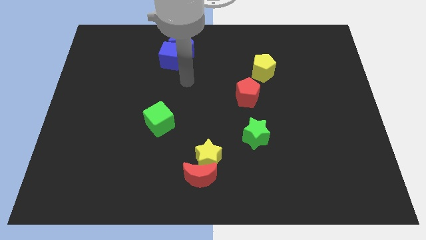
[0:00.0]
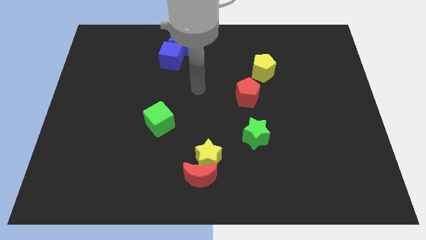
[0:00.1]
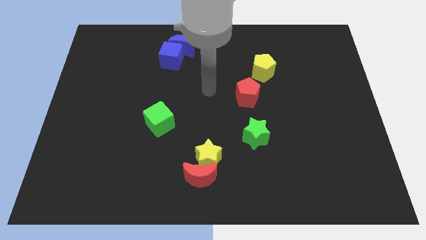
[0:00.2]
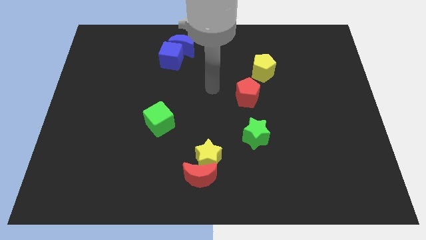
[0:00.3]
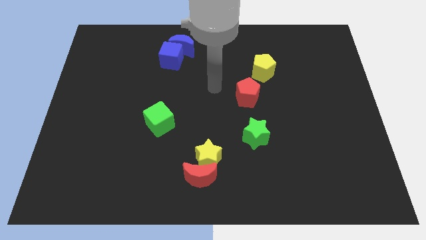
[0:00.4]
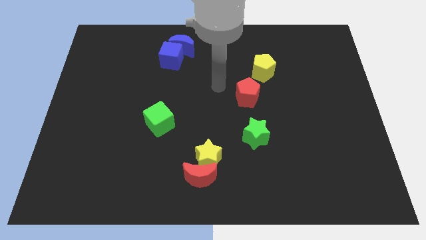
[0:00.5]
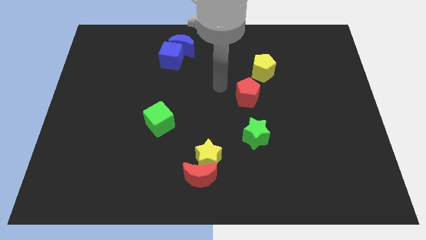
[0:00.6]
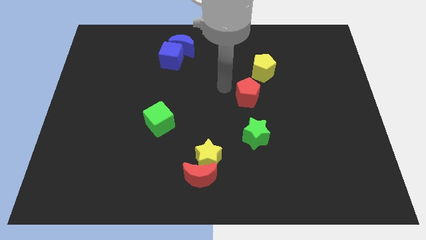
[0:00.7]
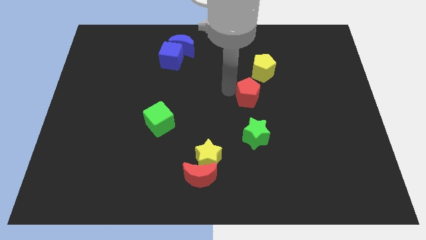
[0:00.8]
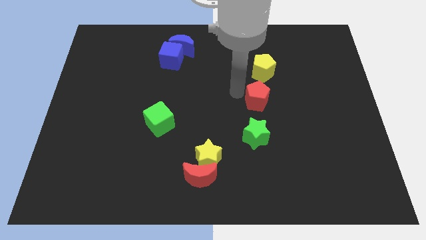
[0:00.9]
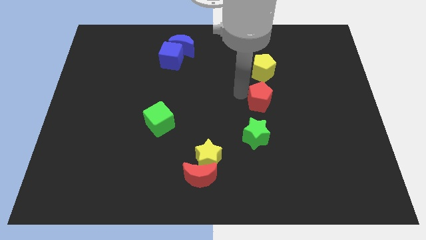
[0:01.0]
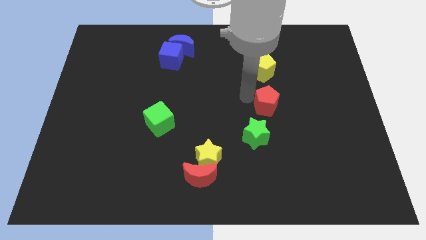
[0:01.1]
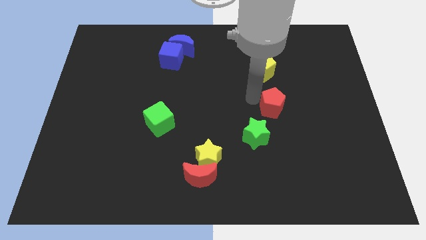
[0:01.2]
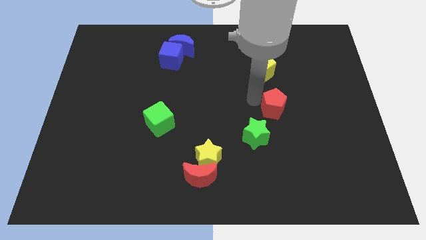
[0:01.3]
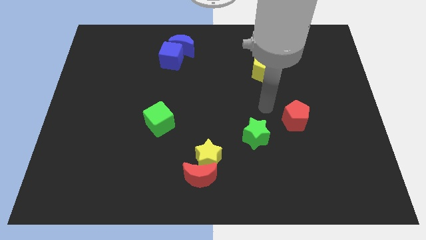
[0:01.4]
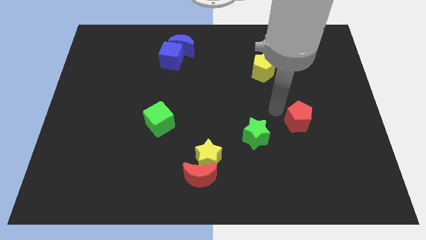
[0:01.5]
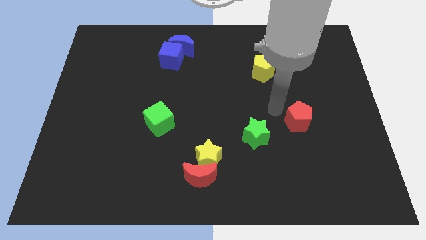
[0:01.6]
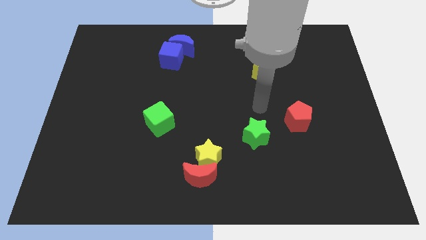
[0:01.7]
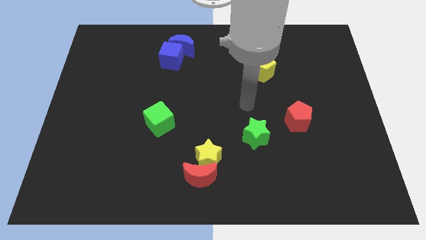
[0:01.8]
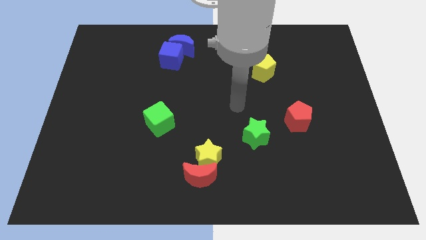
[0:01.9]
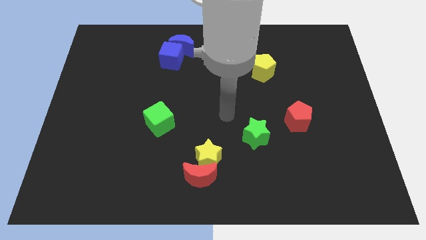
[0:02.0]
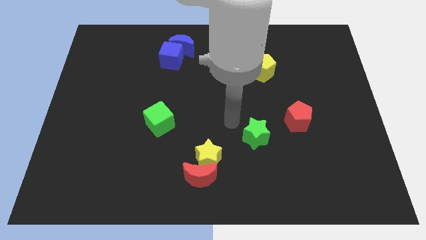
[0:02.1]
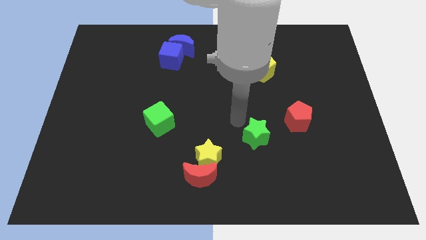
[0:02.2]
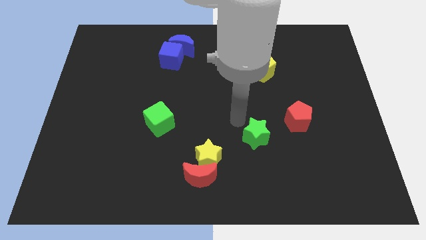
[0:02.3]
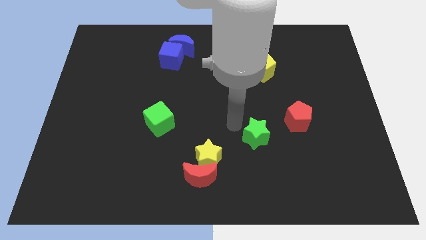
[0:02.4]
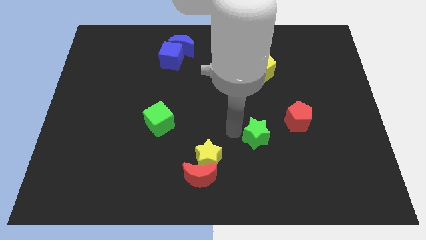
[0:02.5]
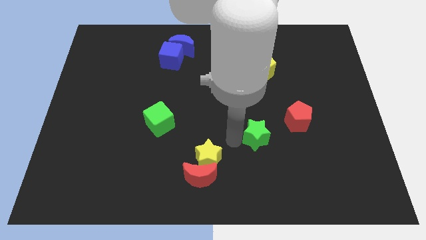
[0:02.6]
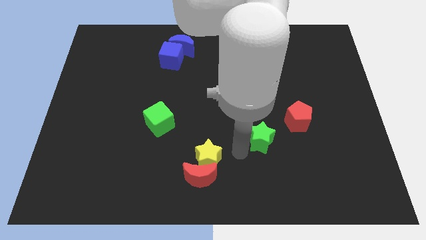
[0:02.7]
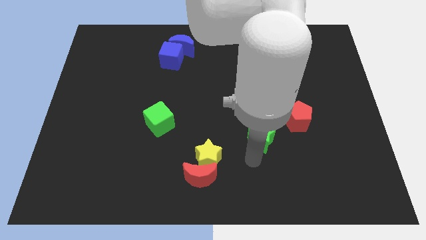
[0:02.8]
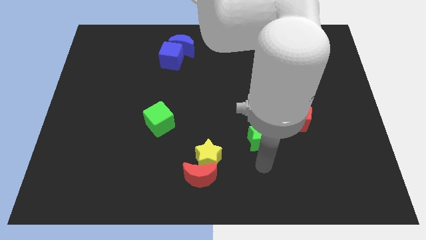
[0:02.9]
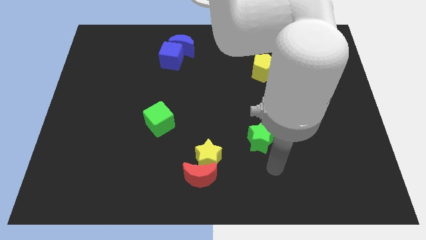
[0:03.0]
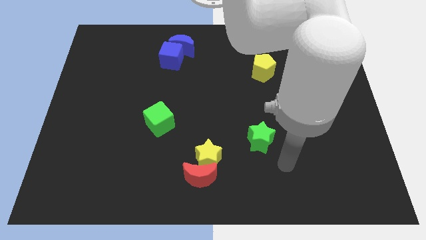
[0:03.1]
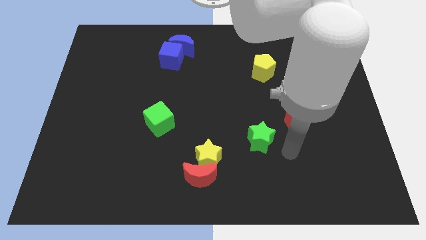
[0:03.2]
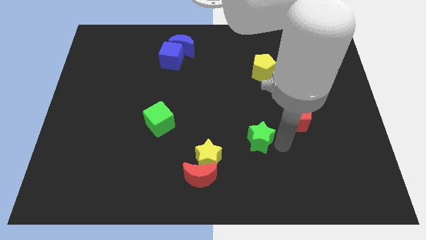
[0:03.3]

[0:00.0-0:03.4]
move the red pentagon towards the bottom right corner

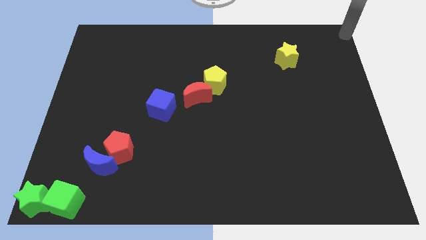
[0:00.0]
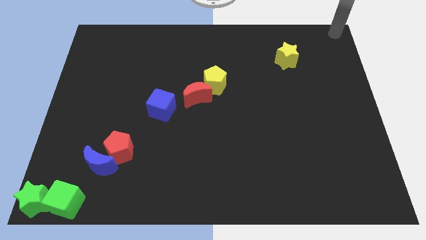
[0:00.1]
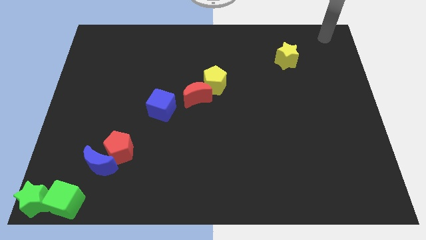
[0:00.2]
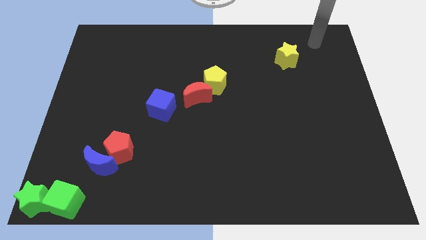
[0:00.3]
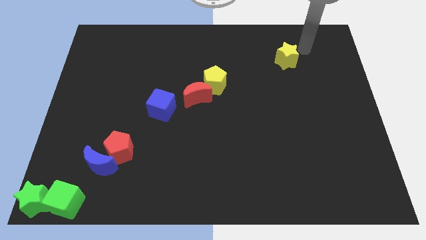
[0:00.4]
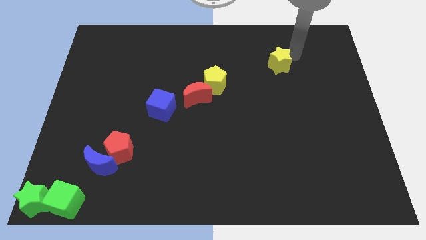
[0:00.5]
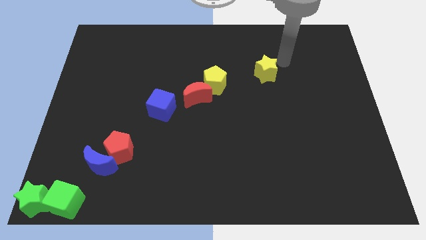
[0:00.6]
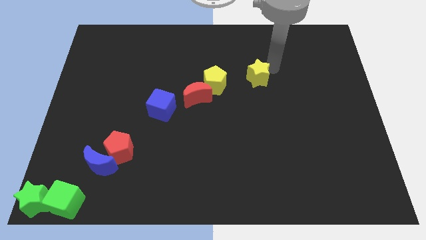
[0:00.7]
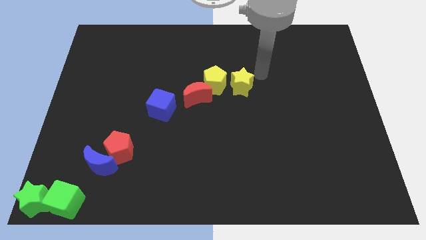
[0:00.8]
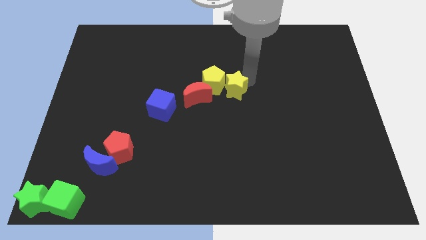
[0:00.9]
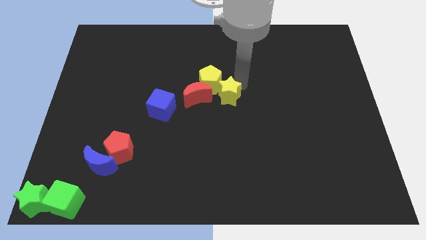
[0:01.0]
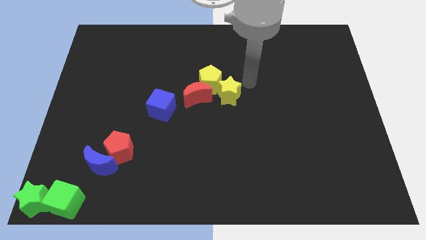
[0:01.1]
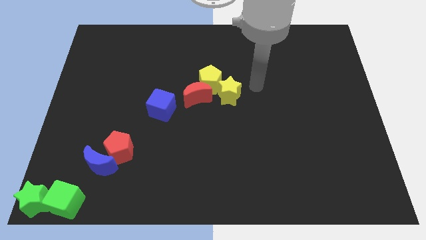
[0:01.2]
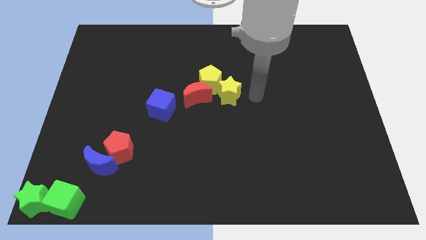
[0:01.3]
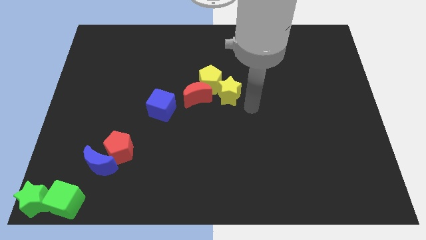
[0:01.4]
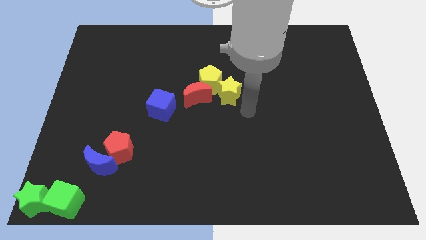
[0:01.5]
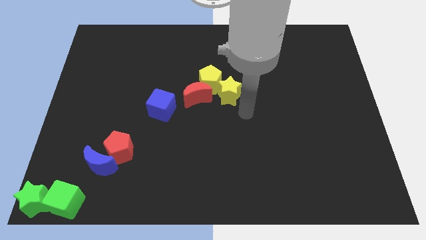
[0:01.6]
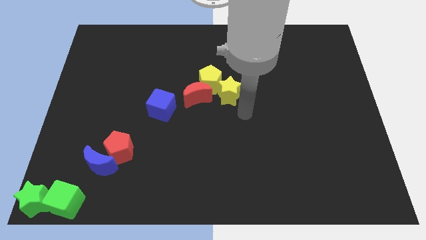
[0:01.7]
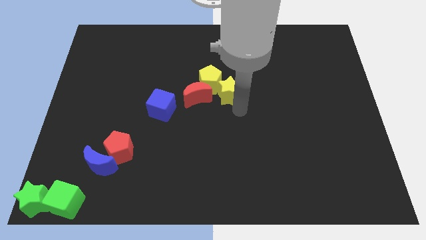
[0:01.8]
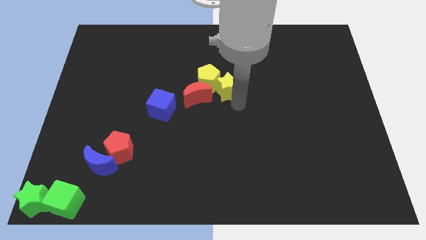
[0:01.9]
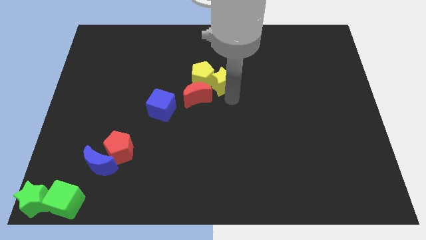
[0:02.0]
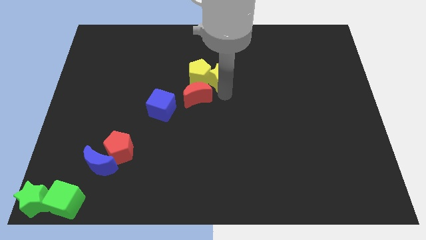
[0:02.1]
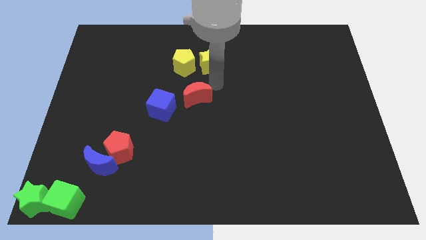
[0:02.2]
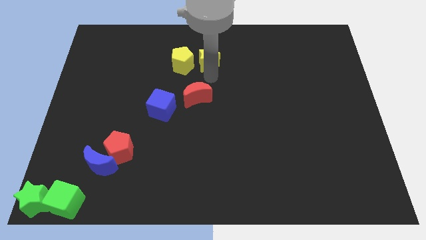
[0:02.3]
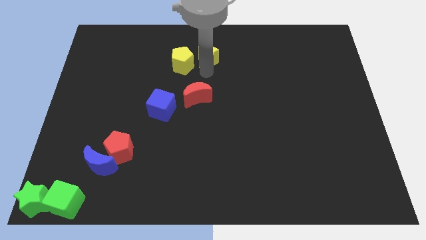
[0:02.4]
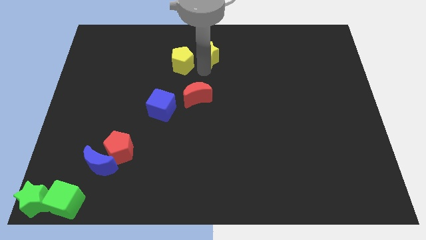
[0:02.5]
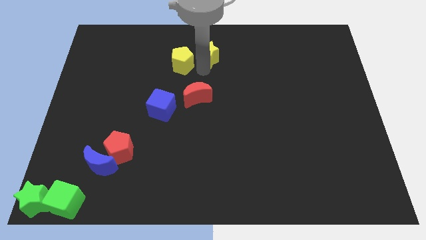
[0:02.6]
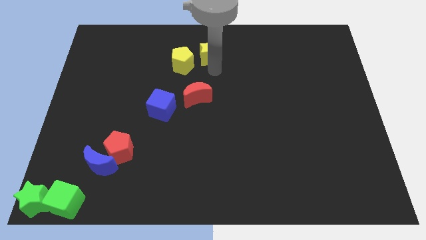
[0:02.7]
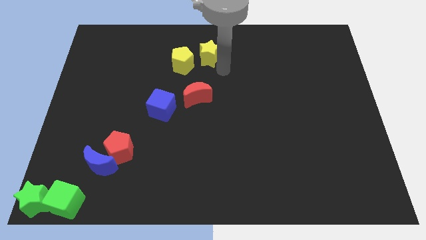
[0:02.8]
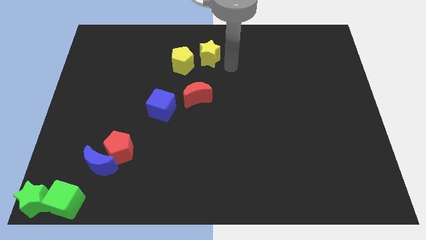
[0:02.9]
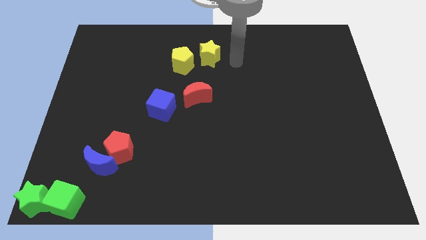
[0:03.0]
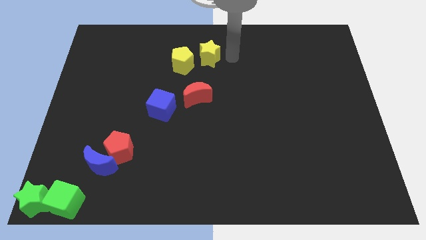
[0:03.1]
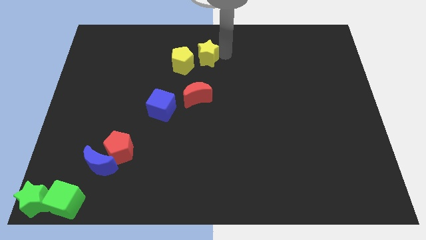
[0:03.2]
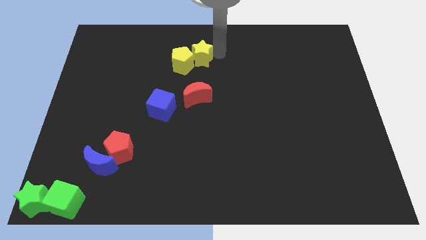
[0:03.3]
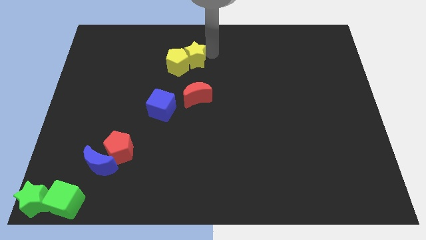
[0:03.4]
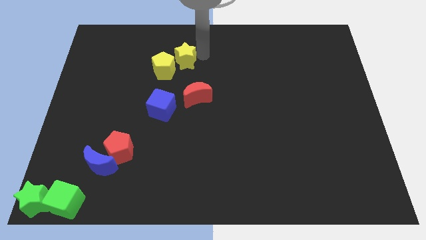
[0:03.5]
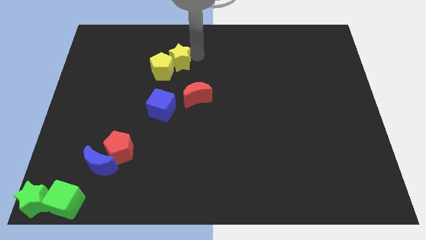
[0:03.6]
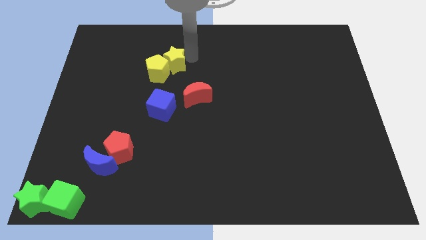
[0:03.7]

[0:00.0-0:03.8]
move the yellow star into the yellow pentagon and push them above the blue cube

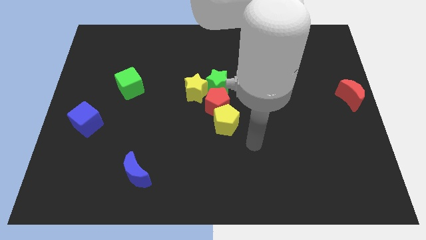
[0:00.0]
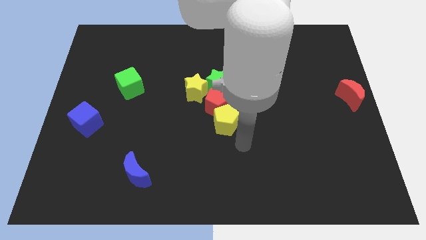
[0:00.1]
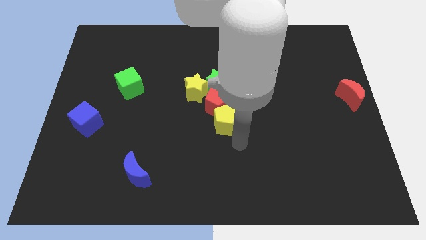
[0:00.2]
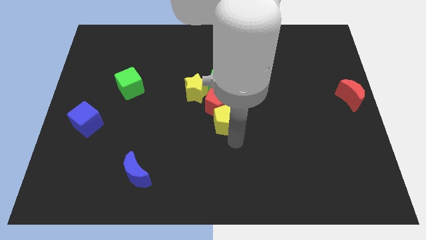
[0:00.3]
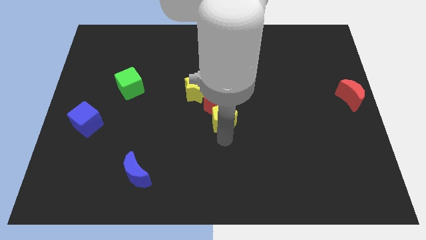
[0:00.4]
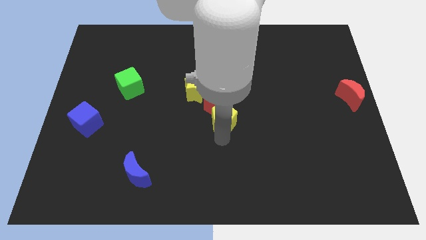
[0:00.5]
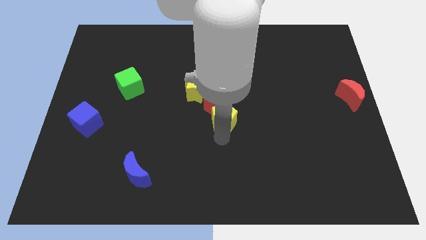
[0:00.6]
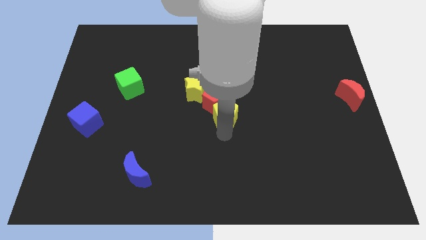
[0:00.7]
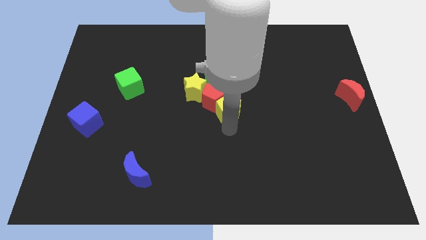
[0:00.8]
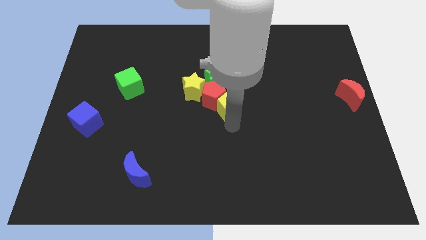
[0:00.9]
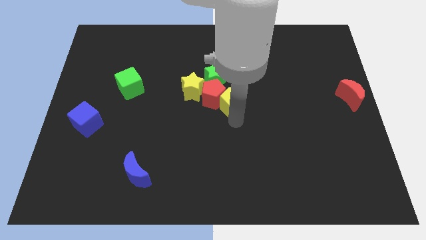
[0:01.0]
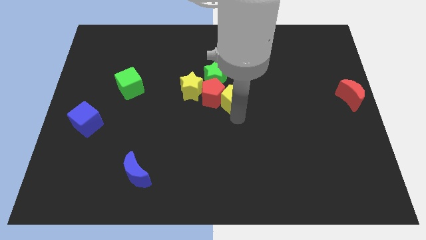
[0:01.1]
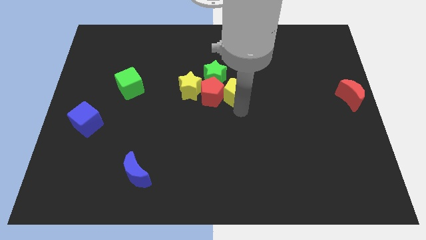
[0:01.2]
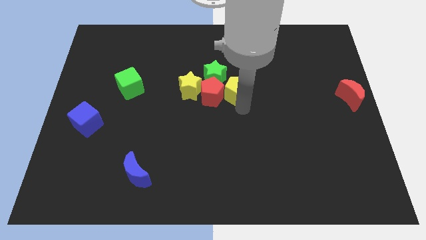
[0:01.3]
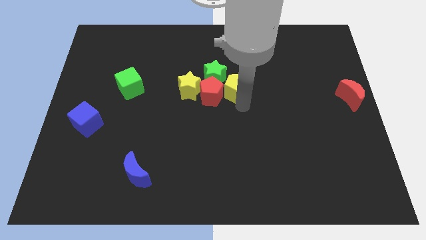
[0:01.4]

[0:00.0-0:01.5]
move yellow pentagon to the center of the board

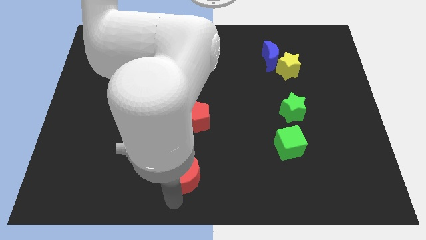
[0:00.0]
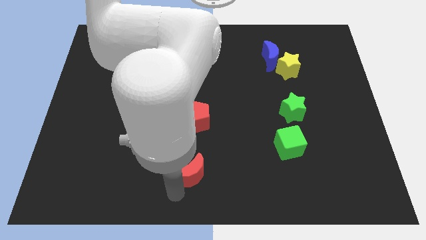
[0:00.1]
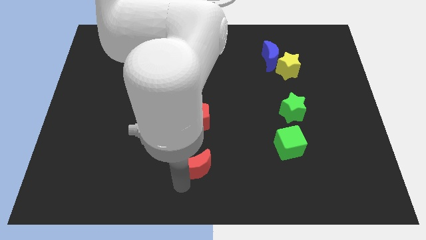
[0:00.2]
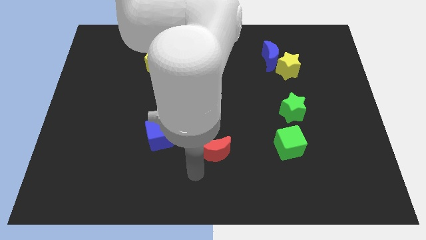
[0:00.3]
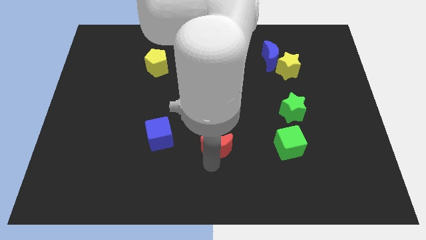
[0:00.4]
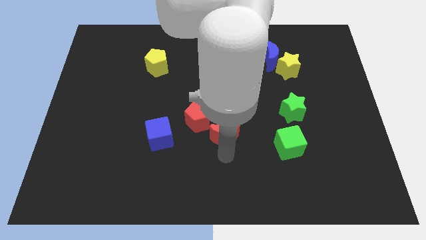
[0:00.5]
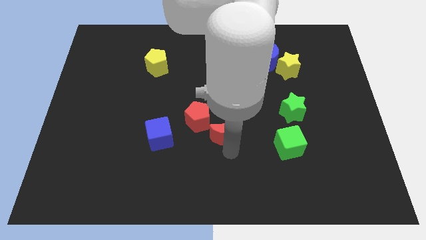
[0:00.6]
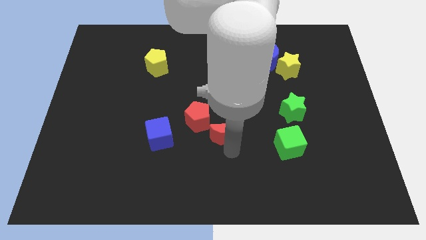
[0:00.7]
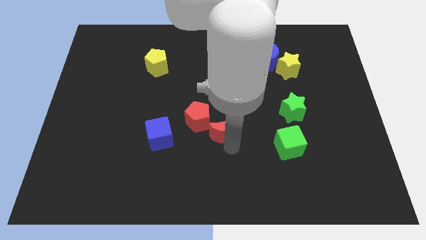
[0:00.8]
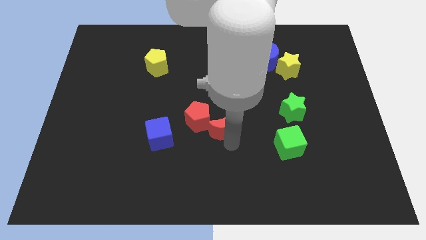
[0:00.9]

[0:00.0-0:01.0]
place red moon to the bottom right of red pentagon
